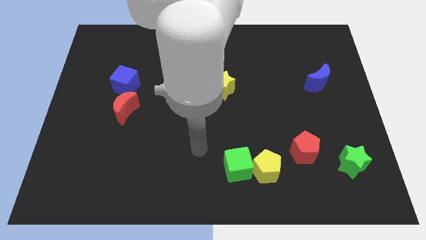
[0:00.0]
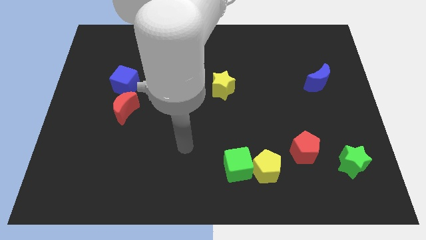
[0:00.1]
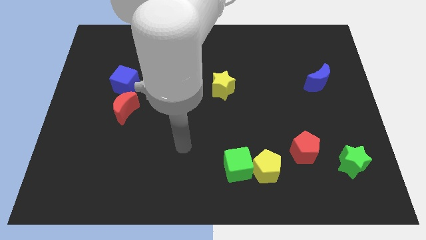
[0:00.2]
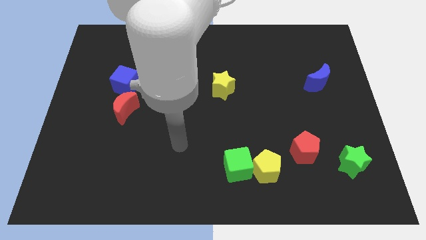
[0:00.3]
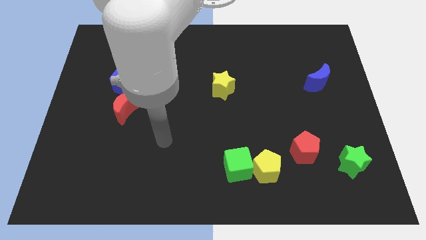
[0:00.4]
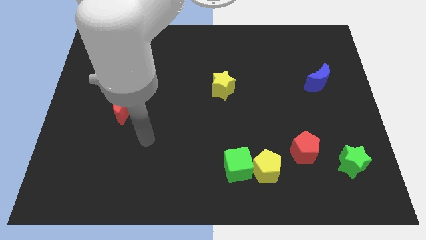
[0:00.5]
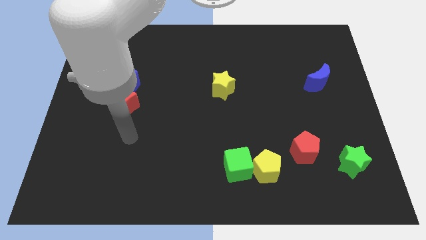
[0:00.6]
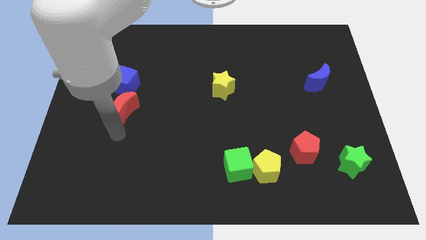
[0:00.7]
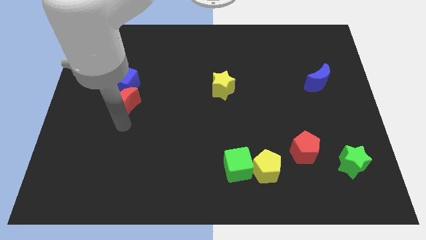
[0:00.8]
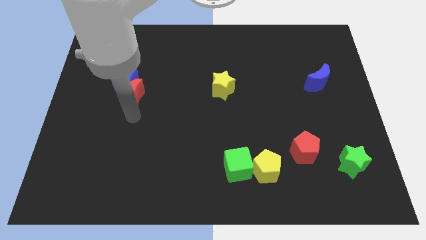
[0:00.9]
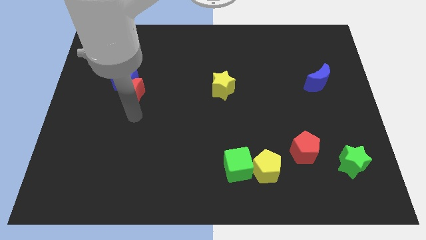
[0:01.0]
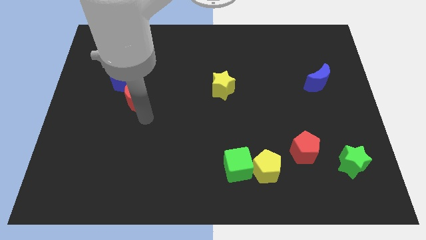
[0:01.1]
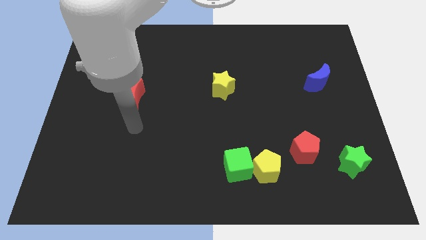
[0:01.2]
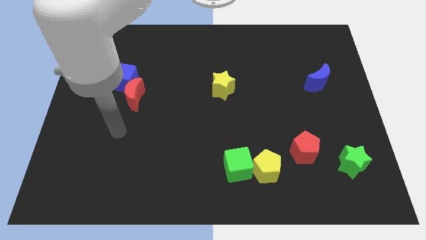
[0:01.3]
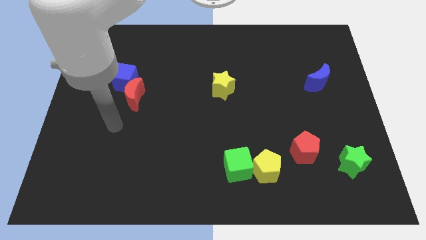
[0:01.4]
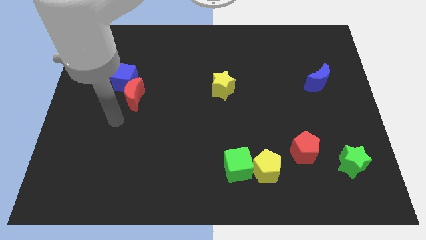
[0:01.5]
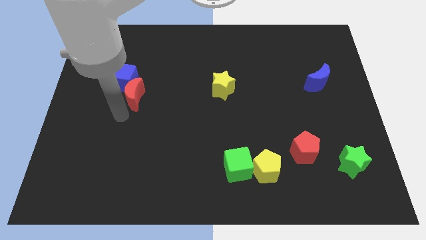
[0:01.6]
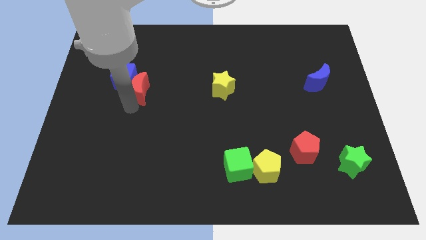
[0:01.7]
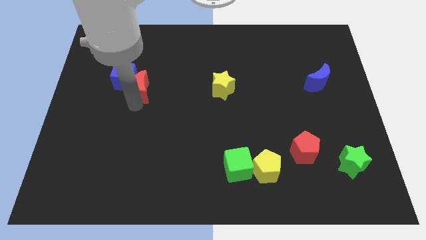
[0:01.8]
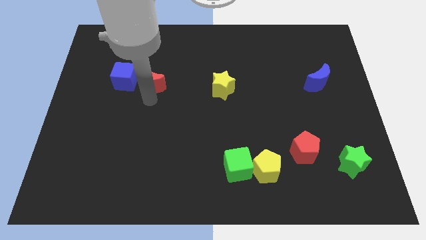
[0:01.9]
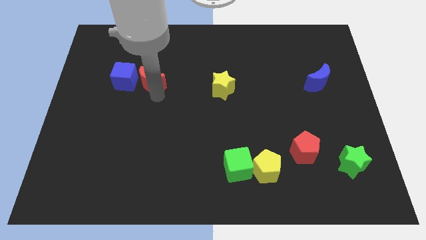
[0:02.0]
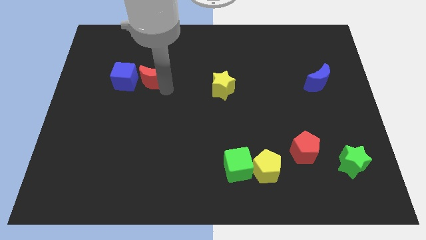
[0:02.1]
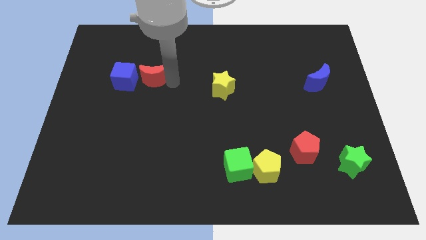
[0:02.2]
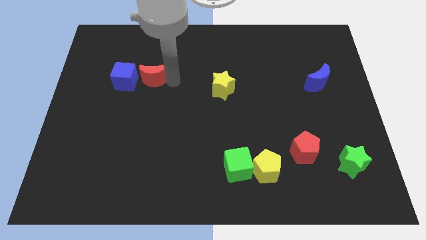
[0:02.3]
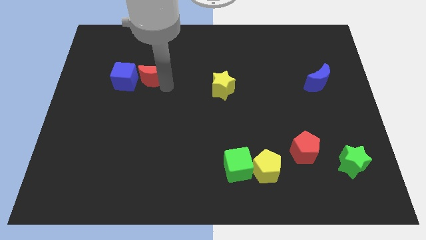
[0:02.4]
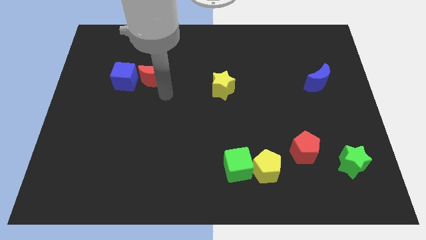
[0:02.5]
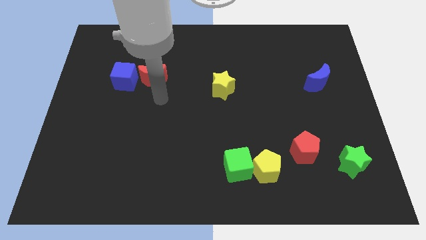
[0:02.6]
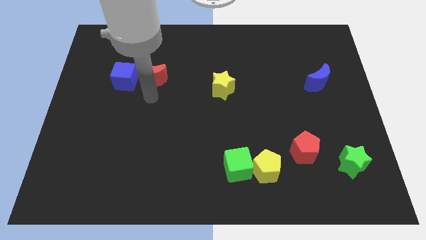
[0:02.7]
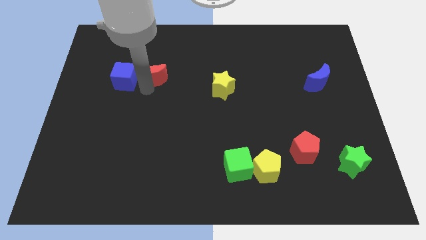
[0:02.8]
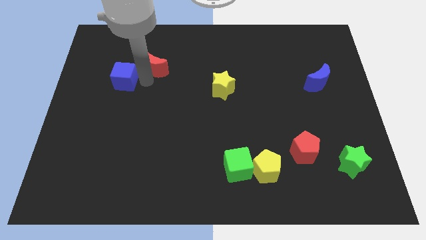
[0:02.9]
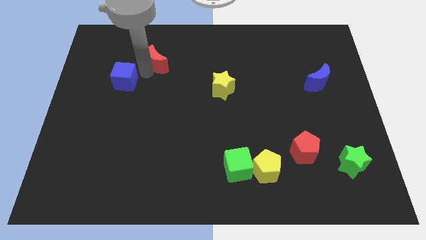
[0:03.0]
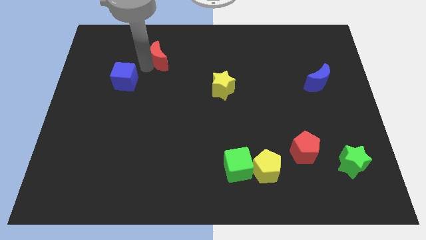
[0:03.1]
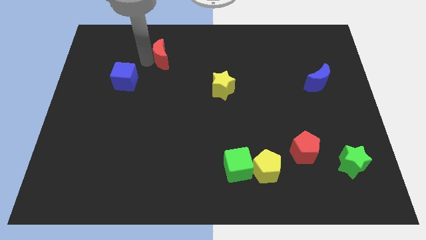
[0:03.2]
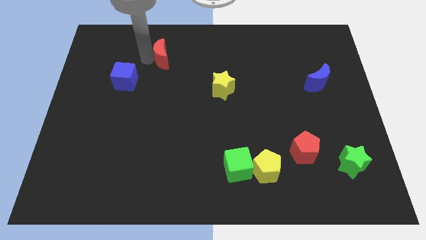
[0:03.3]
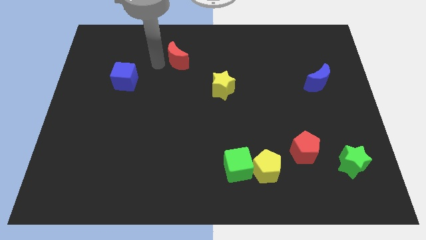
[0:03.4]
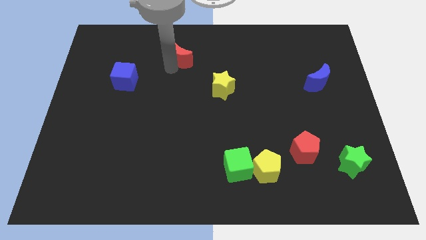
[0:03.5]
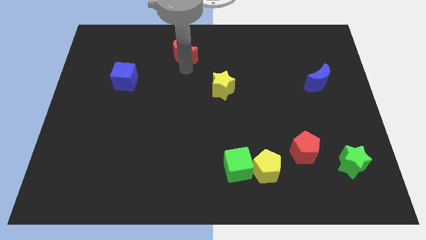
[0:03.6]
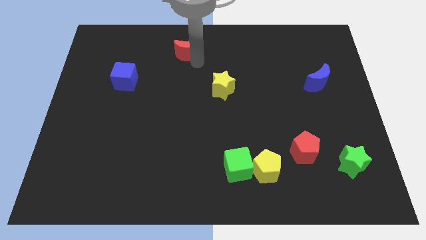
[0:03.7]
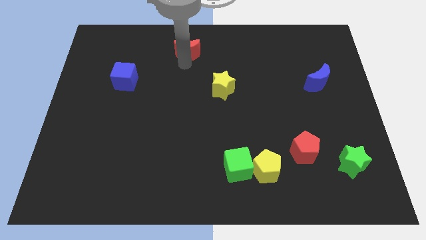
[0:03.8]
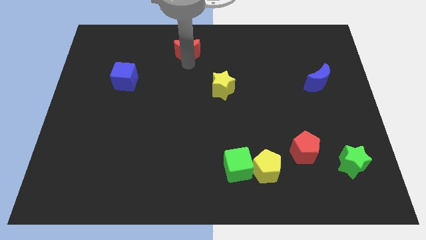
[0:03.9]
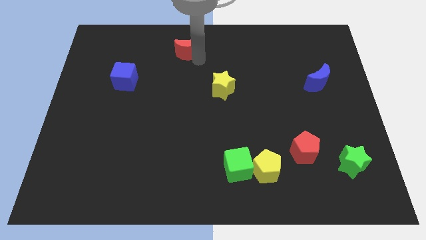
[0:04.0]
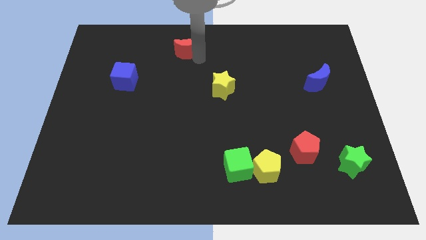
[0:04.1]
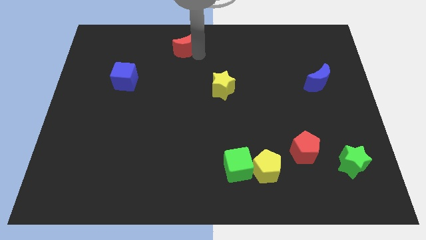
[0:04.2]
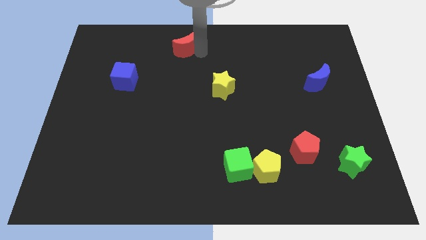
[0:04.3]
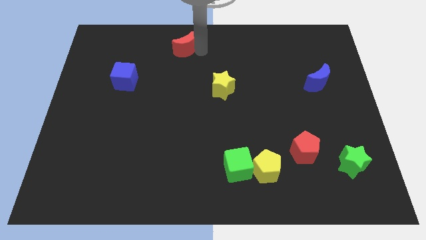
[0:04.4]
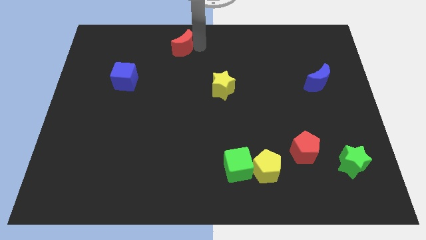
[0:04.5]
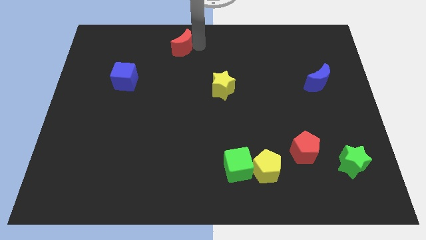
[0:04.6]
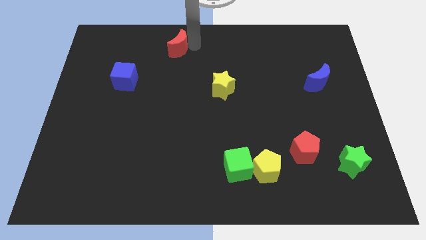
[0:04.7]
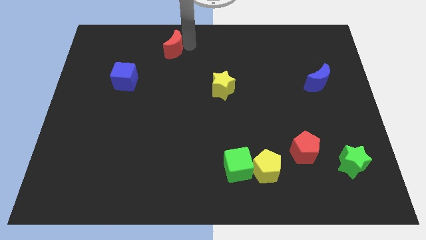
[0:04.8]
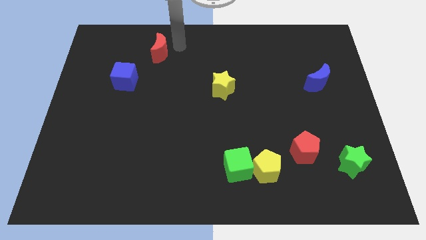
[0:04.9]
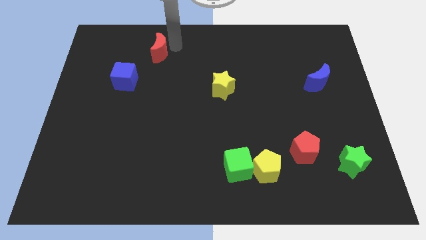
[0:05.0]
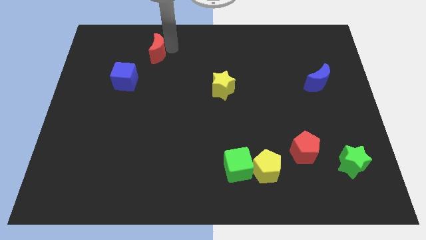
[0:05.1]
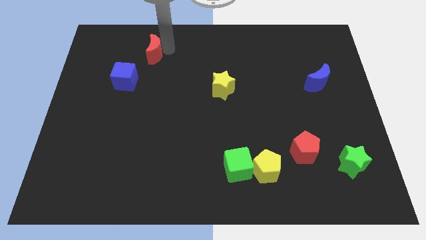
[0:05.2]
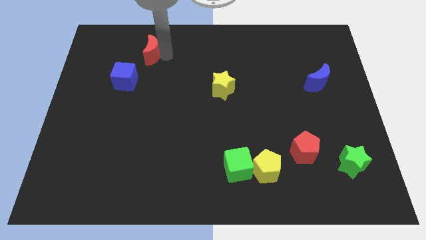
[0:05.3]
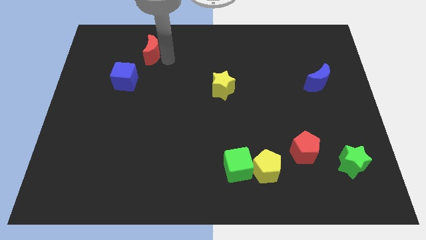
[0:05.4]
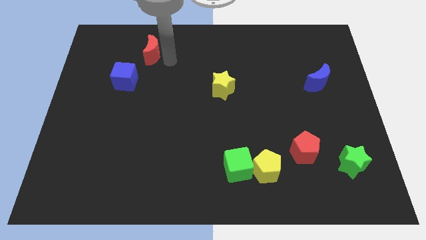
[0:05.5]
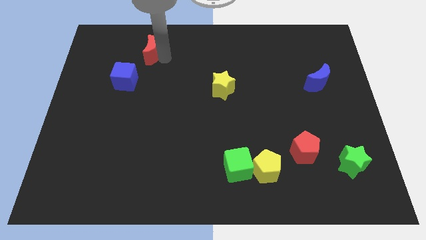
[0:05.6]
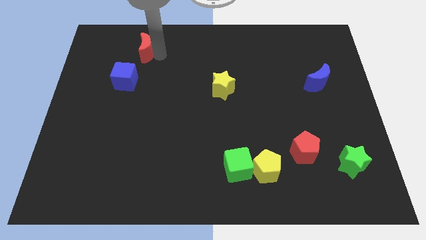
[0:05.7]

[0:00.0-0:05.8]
put the red crescent at the top right of the blue cube

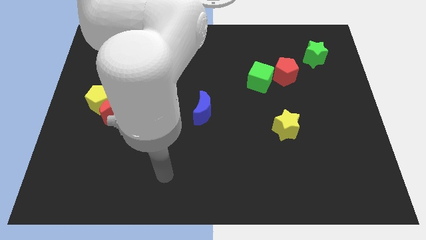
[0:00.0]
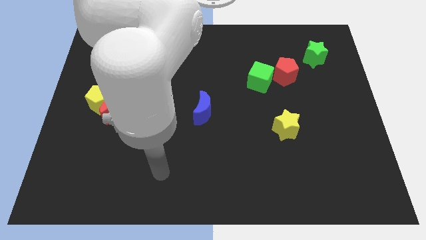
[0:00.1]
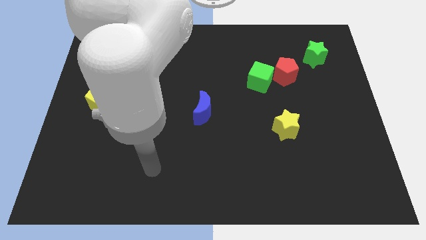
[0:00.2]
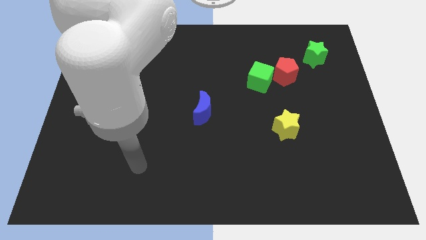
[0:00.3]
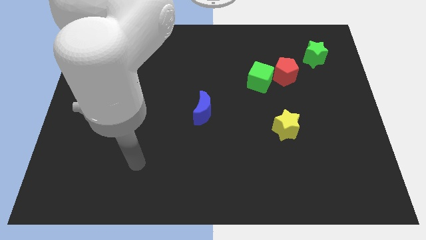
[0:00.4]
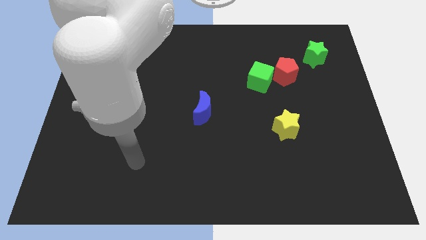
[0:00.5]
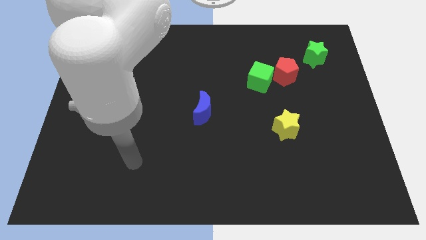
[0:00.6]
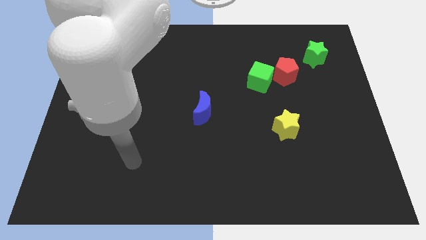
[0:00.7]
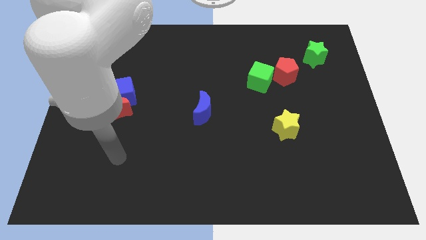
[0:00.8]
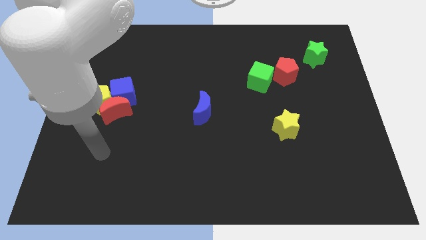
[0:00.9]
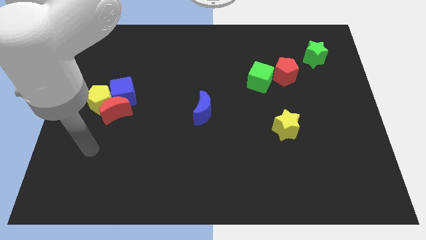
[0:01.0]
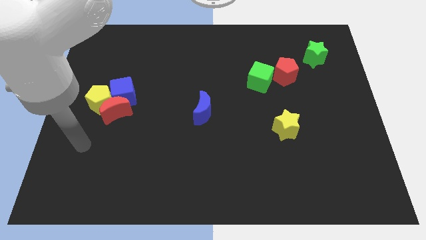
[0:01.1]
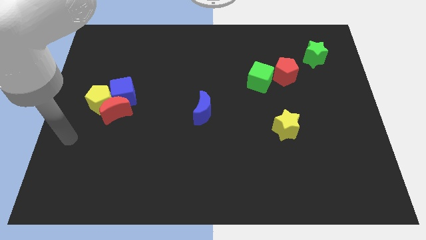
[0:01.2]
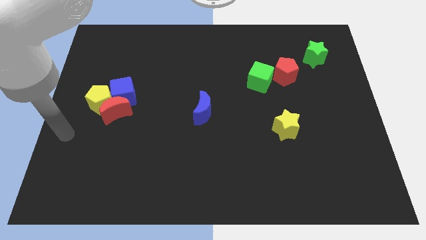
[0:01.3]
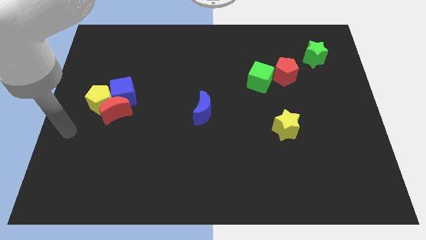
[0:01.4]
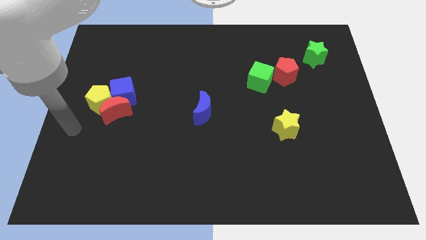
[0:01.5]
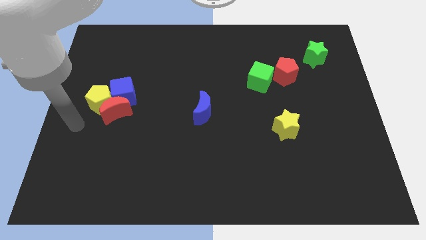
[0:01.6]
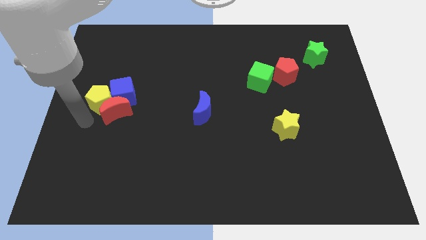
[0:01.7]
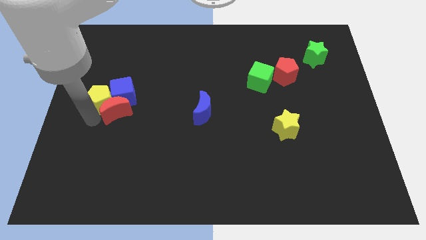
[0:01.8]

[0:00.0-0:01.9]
move your arm to the left of the red moon

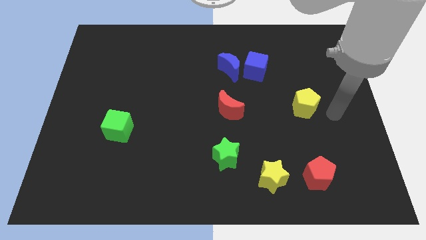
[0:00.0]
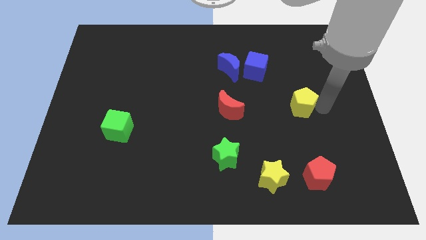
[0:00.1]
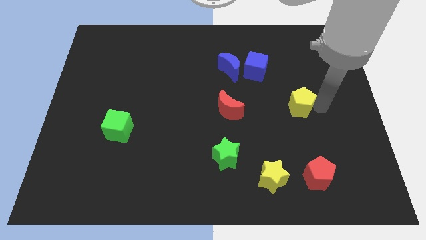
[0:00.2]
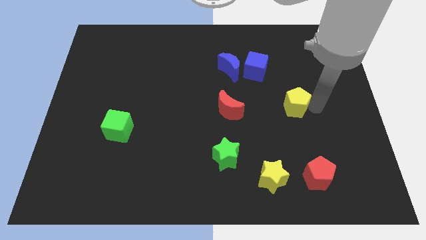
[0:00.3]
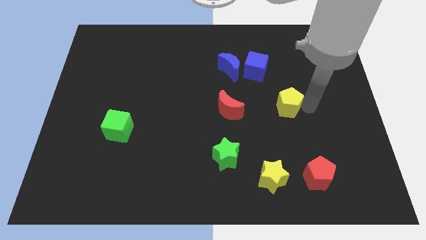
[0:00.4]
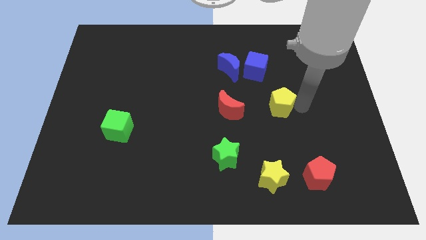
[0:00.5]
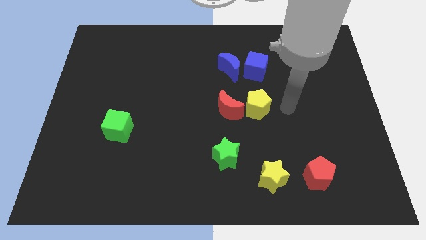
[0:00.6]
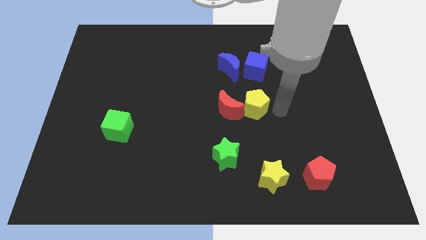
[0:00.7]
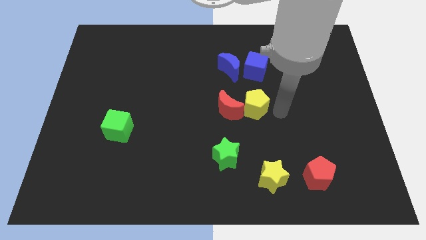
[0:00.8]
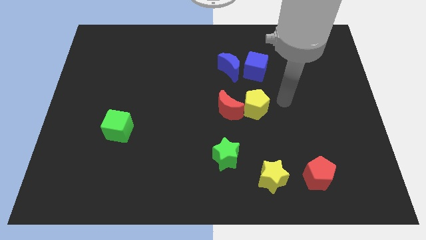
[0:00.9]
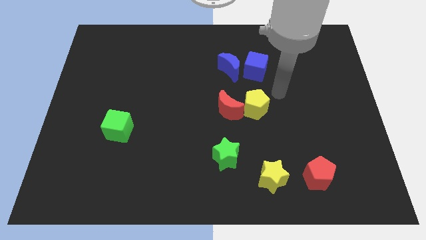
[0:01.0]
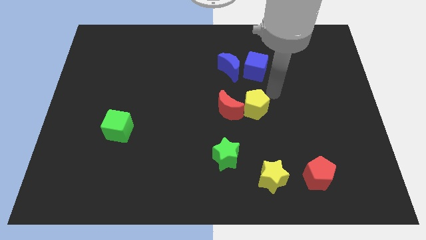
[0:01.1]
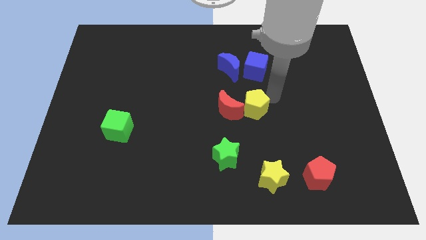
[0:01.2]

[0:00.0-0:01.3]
push the yellow pentagon to the right of the red moon
